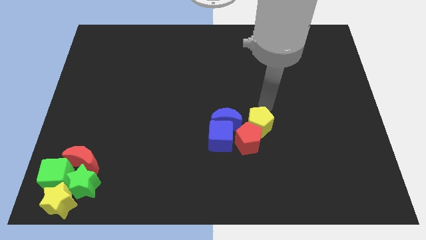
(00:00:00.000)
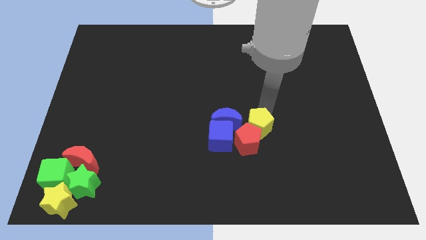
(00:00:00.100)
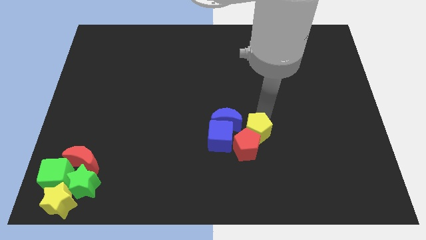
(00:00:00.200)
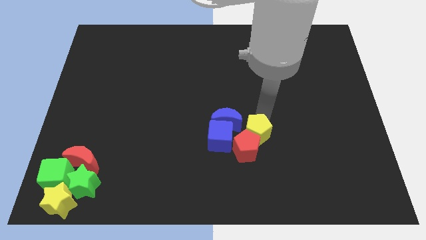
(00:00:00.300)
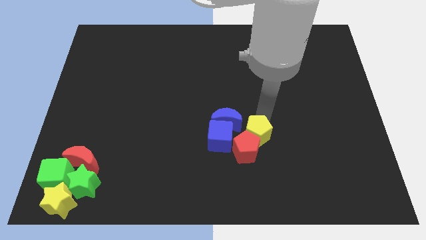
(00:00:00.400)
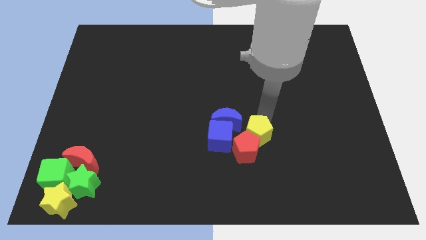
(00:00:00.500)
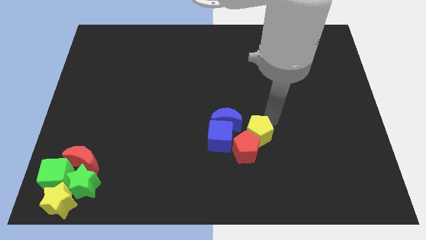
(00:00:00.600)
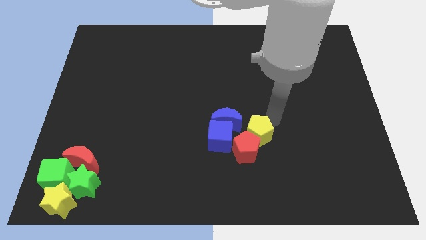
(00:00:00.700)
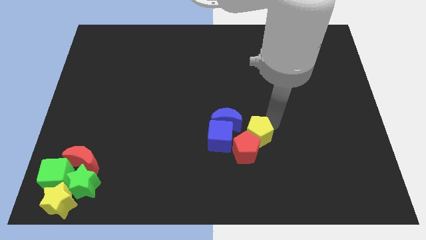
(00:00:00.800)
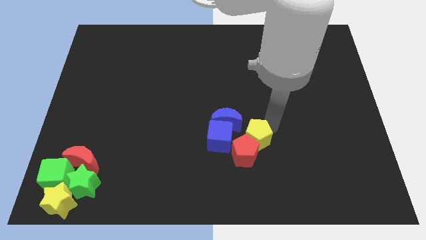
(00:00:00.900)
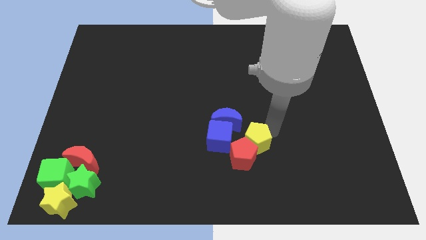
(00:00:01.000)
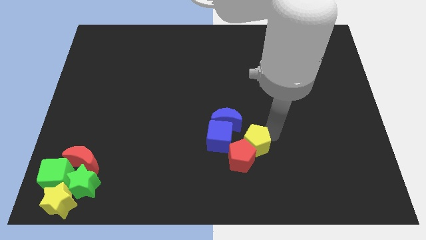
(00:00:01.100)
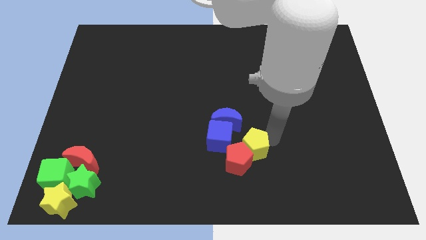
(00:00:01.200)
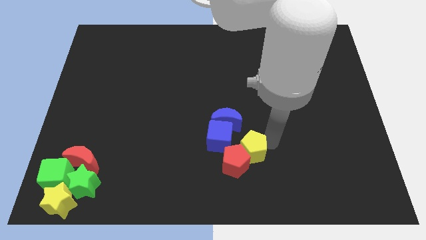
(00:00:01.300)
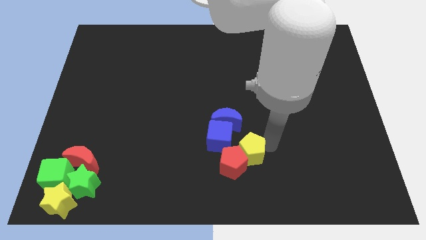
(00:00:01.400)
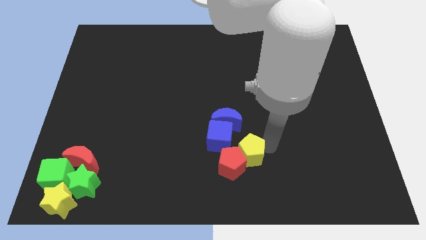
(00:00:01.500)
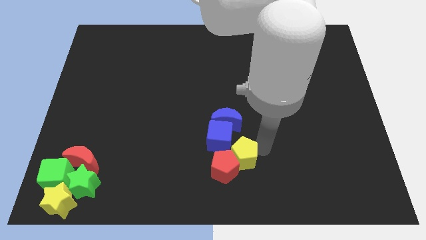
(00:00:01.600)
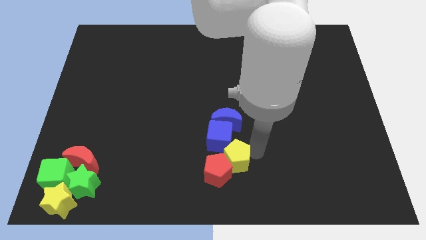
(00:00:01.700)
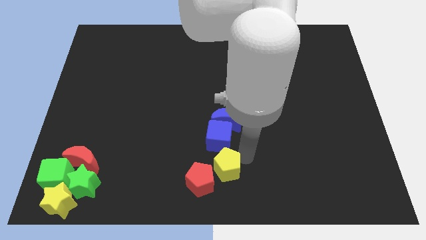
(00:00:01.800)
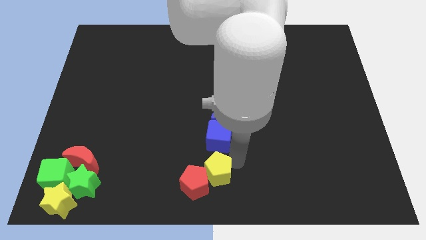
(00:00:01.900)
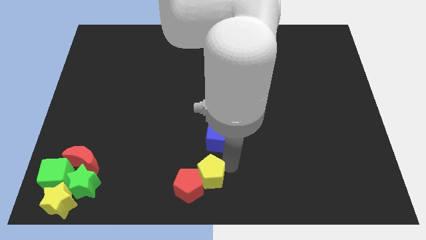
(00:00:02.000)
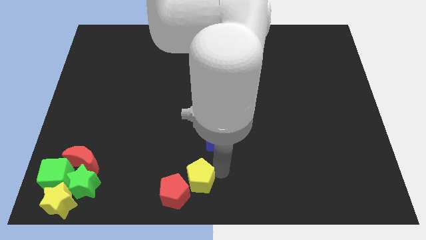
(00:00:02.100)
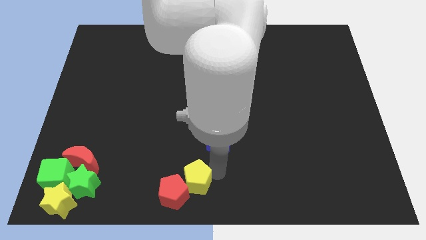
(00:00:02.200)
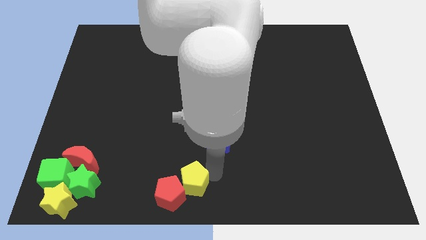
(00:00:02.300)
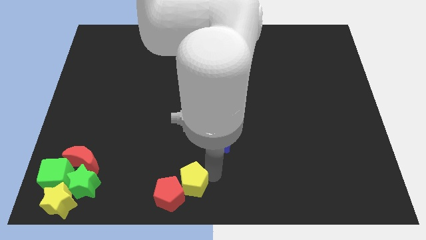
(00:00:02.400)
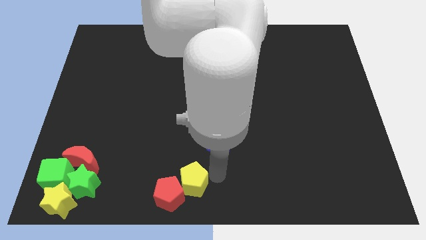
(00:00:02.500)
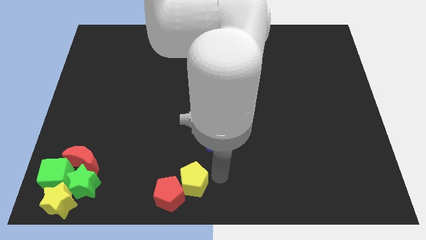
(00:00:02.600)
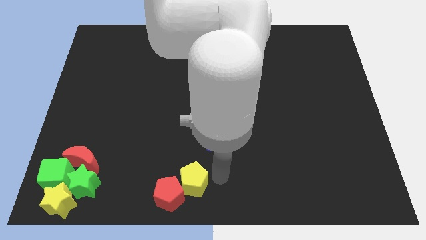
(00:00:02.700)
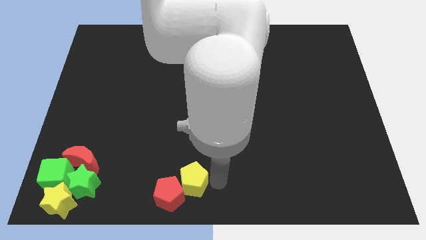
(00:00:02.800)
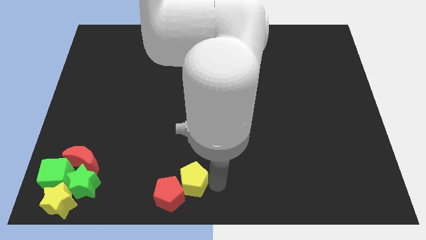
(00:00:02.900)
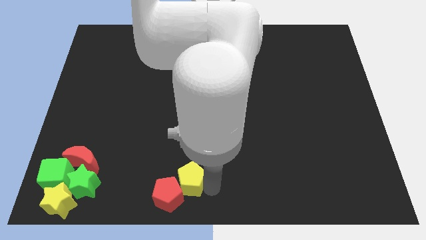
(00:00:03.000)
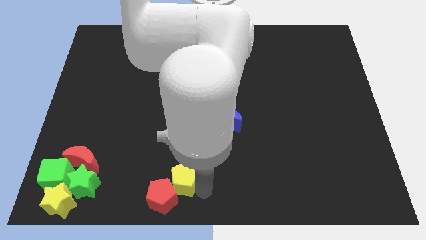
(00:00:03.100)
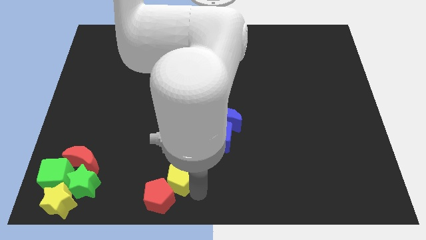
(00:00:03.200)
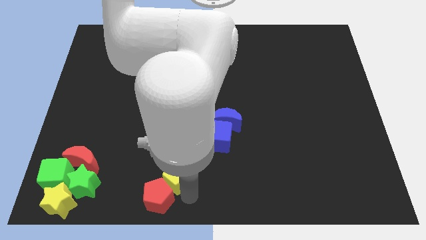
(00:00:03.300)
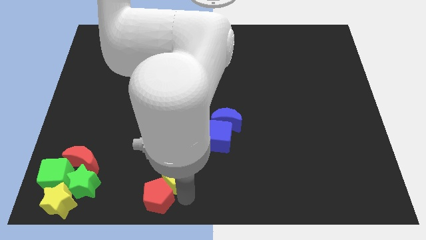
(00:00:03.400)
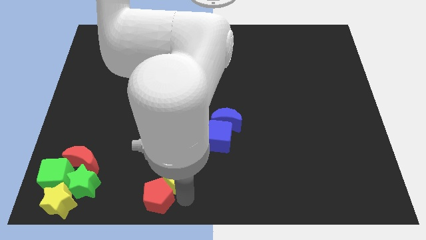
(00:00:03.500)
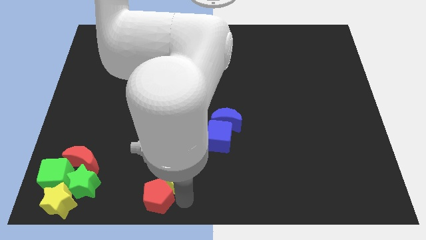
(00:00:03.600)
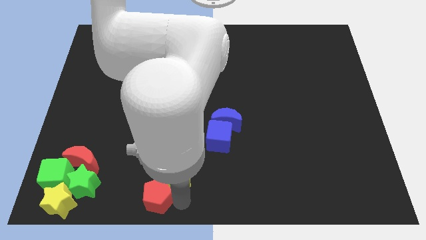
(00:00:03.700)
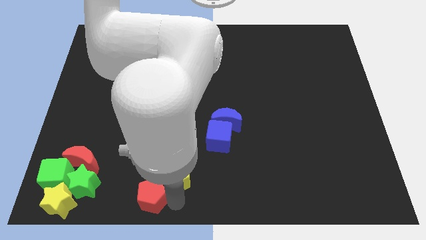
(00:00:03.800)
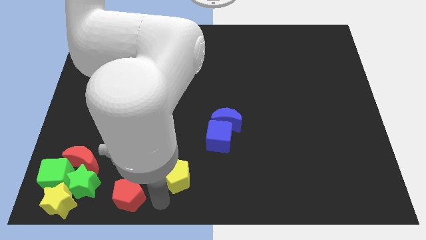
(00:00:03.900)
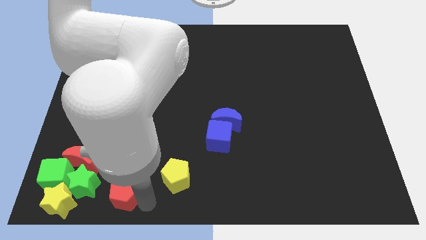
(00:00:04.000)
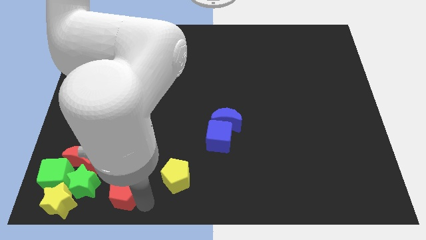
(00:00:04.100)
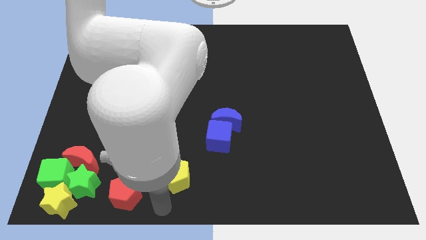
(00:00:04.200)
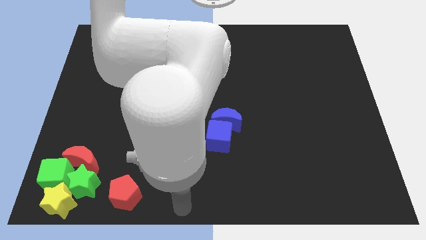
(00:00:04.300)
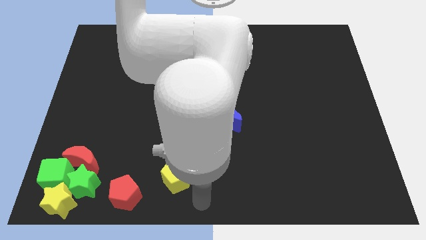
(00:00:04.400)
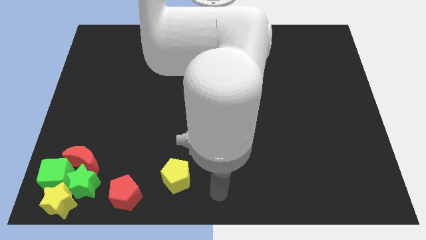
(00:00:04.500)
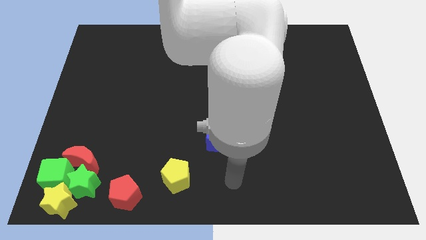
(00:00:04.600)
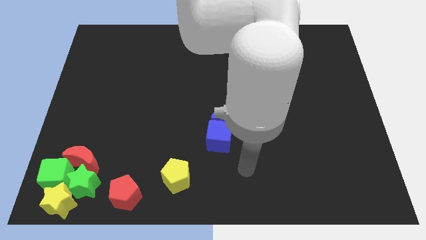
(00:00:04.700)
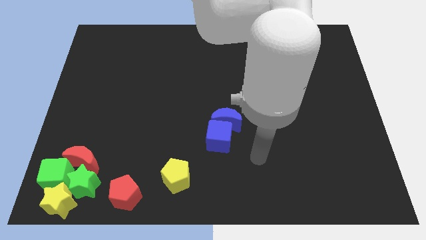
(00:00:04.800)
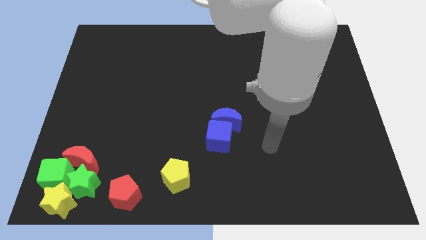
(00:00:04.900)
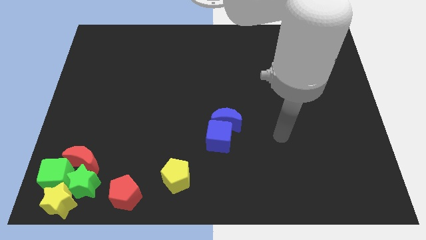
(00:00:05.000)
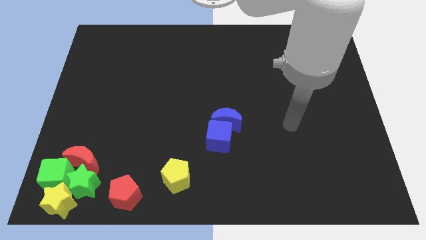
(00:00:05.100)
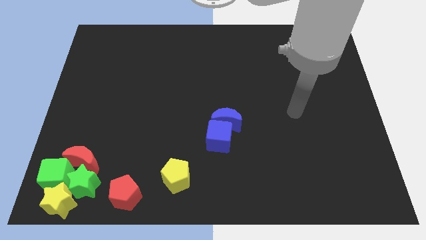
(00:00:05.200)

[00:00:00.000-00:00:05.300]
slide the yellow pentagon and the red pentagon towards the bottom

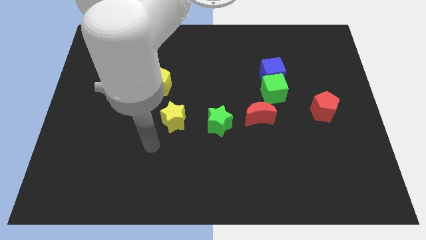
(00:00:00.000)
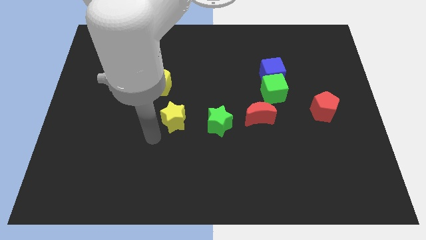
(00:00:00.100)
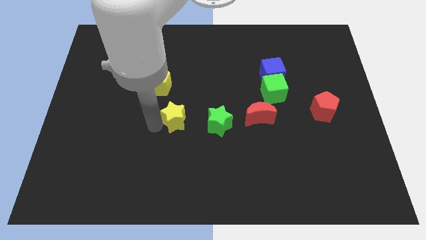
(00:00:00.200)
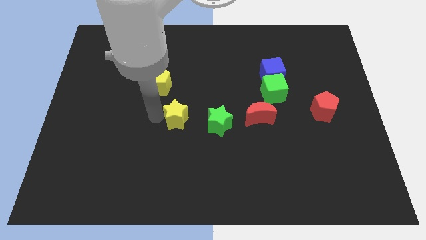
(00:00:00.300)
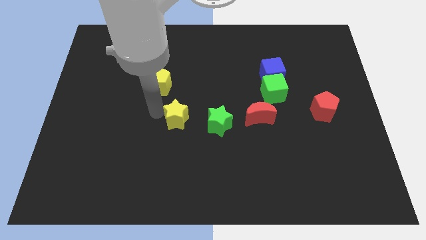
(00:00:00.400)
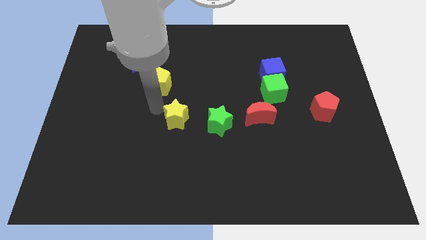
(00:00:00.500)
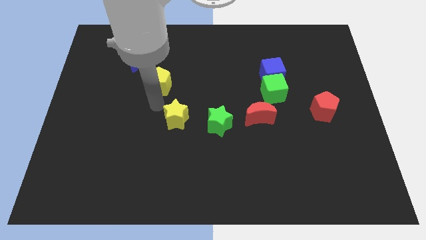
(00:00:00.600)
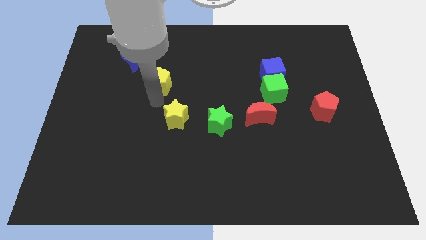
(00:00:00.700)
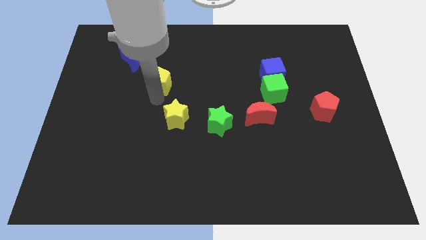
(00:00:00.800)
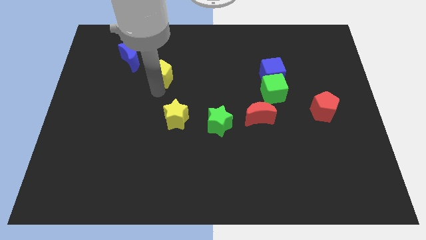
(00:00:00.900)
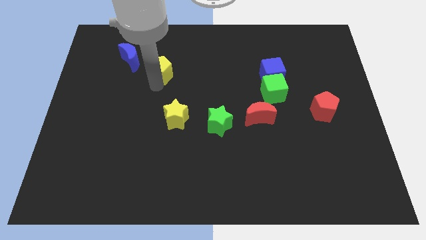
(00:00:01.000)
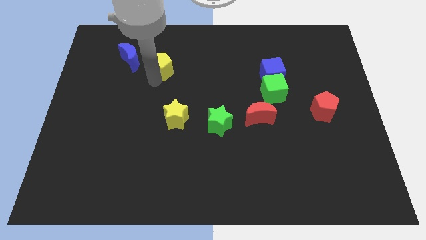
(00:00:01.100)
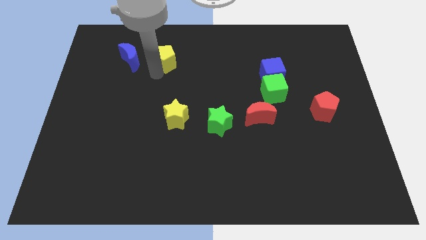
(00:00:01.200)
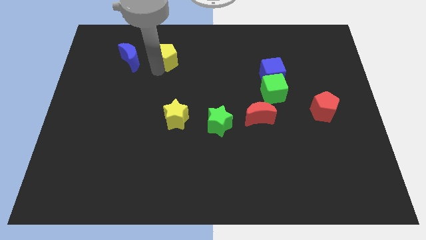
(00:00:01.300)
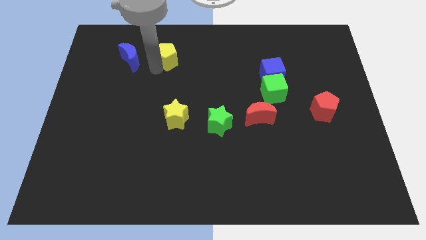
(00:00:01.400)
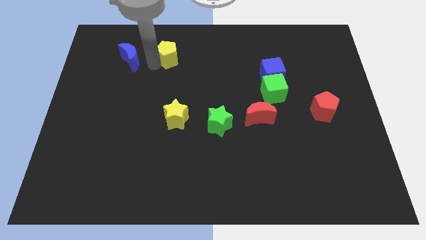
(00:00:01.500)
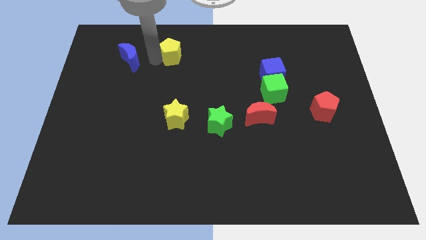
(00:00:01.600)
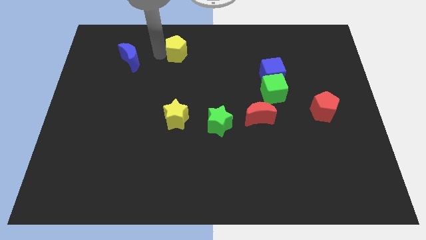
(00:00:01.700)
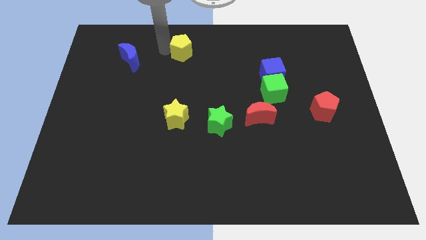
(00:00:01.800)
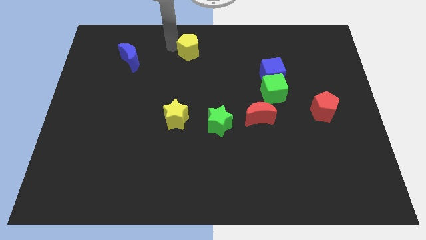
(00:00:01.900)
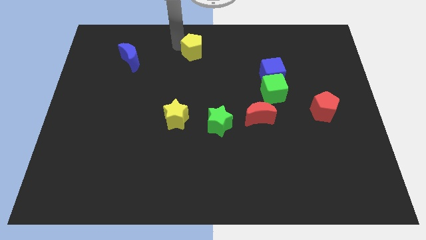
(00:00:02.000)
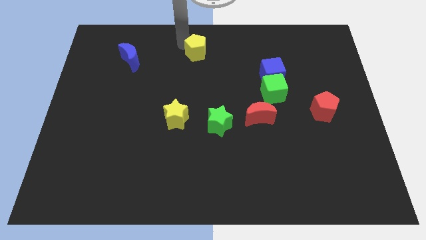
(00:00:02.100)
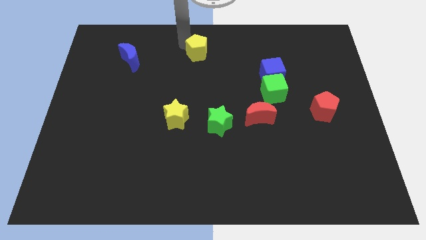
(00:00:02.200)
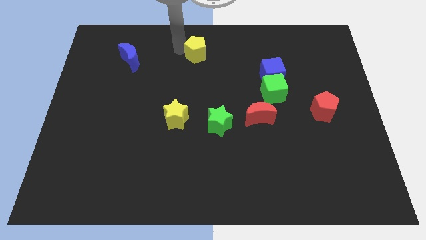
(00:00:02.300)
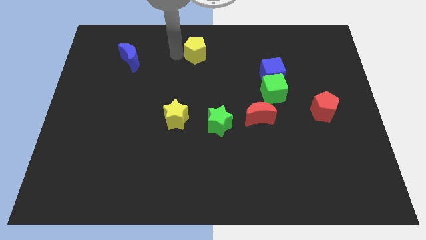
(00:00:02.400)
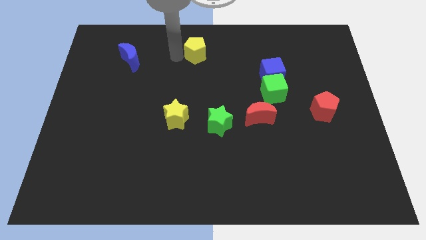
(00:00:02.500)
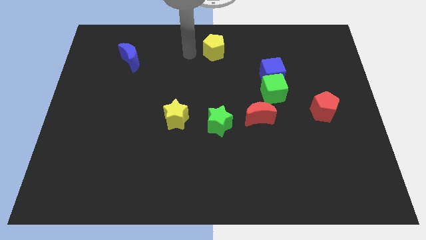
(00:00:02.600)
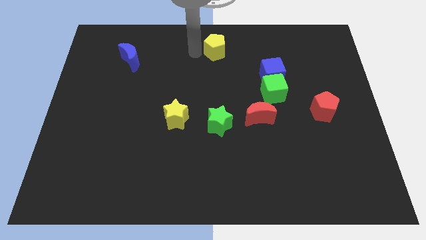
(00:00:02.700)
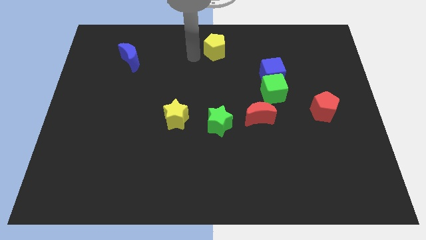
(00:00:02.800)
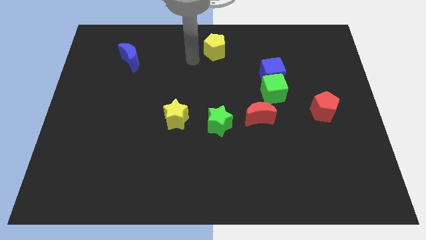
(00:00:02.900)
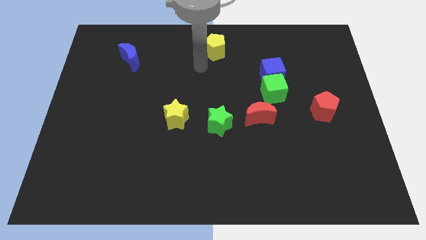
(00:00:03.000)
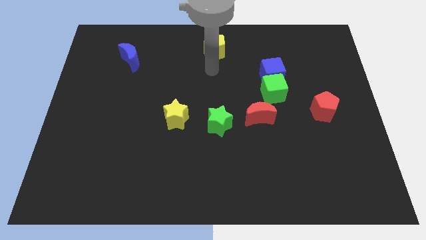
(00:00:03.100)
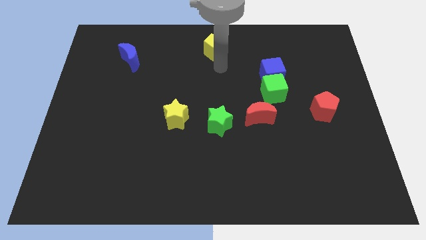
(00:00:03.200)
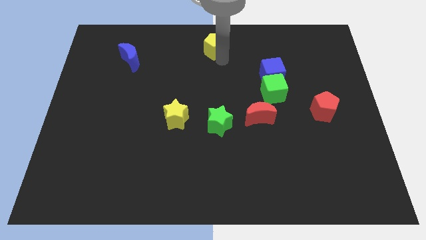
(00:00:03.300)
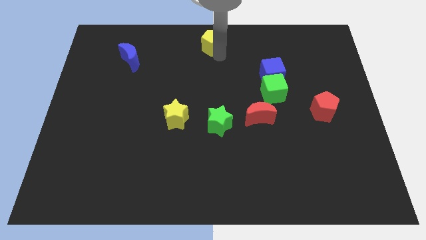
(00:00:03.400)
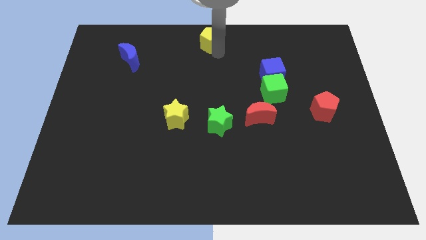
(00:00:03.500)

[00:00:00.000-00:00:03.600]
move the yellow pentagon to the top center of the board

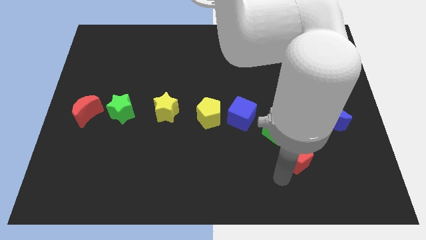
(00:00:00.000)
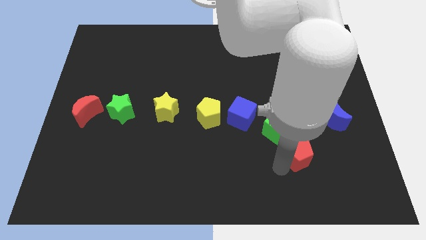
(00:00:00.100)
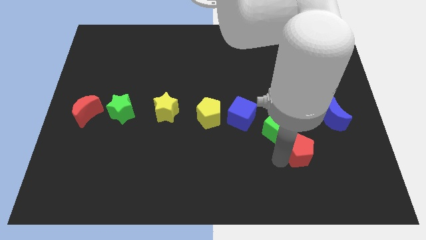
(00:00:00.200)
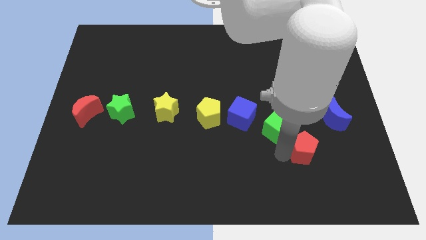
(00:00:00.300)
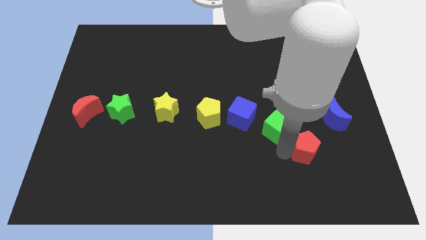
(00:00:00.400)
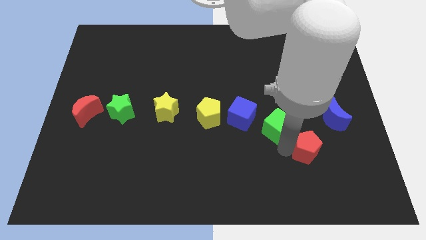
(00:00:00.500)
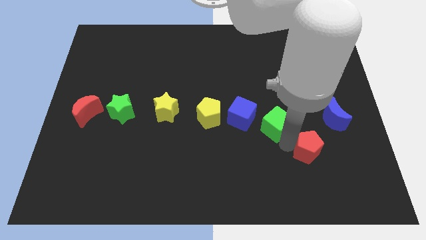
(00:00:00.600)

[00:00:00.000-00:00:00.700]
slightly push the red pentagon towards the diagonal bottom right of the green cube
